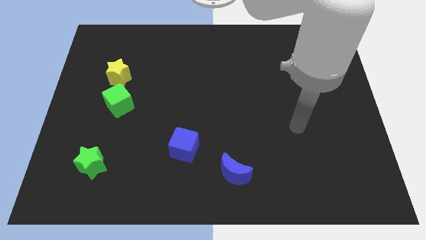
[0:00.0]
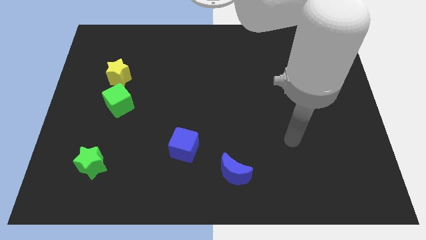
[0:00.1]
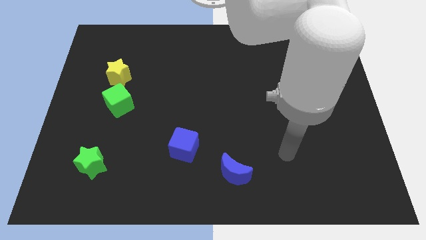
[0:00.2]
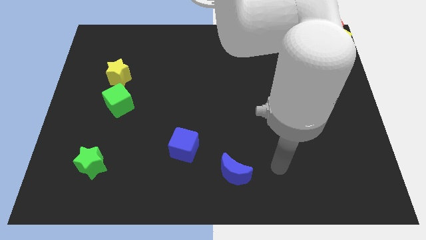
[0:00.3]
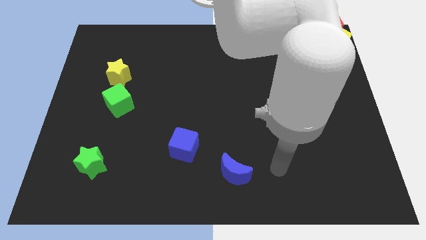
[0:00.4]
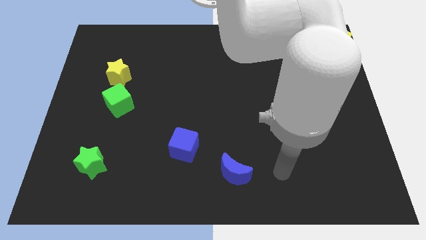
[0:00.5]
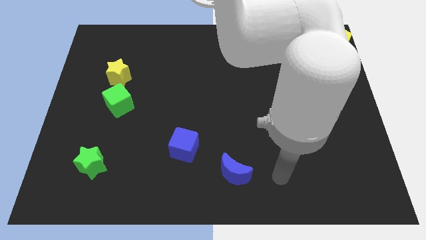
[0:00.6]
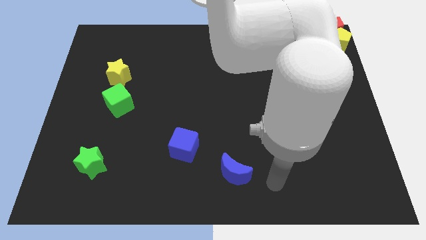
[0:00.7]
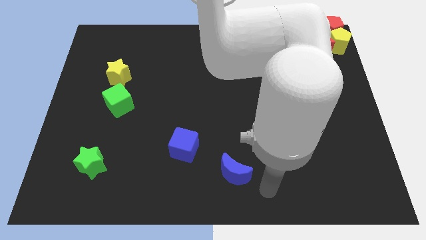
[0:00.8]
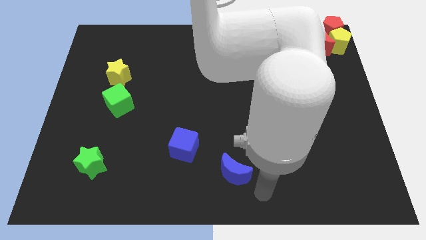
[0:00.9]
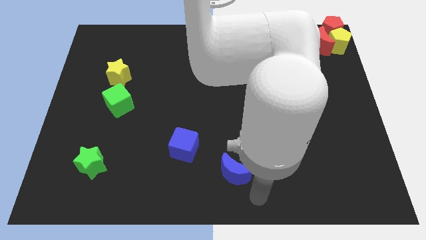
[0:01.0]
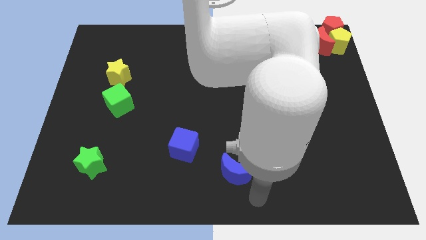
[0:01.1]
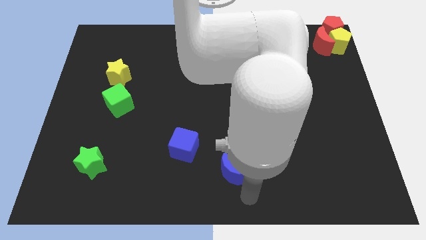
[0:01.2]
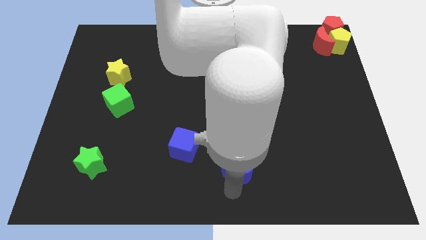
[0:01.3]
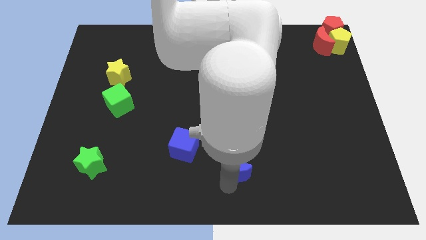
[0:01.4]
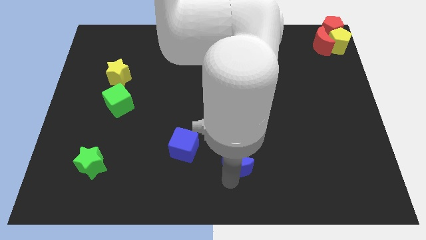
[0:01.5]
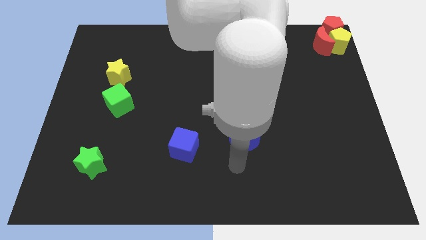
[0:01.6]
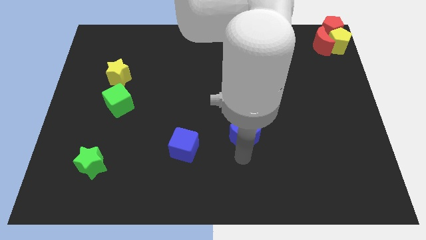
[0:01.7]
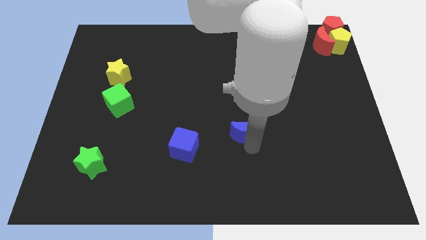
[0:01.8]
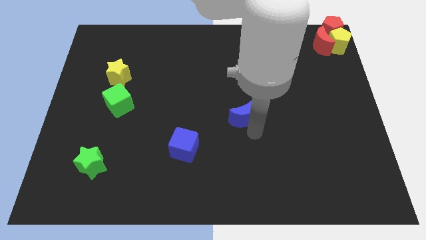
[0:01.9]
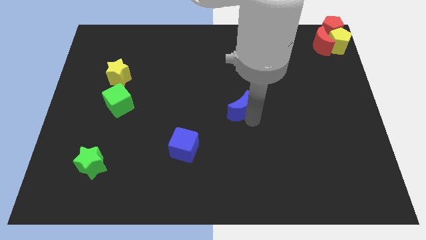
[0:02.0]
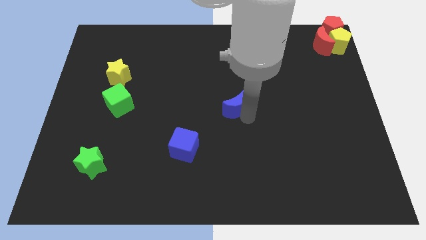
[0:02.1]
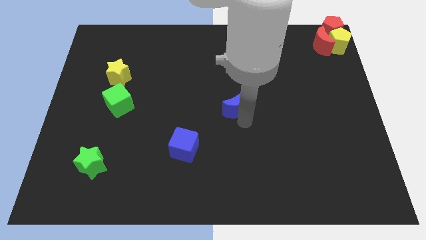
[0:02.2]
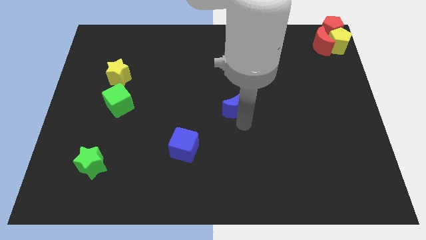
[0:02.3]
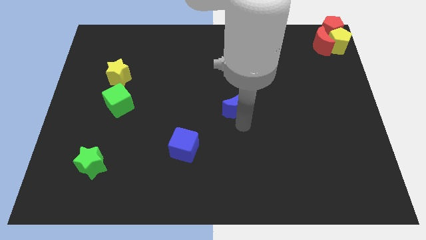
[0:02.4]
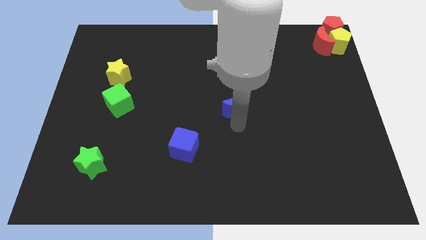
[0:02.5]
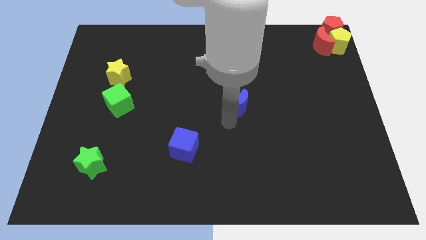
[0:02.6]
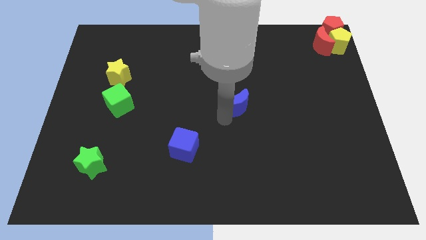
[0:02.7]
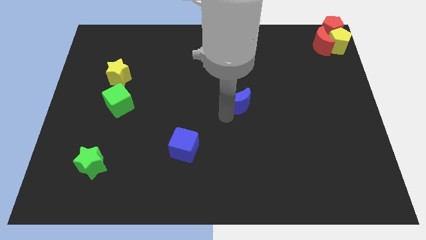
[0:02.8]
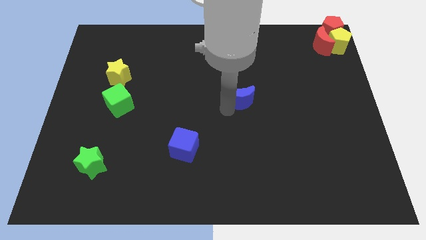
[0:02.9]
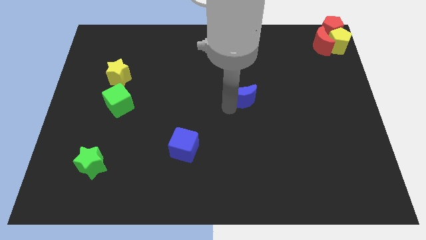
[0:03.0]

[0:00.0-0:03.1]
move your arm and move the blue moon towards the center

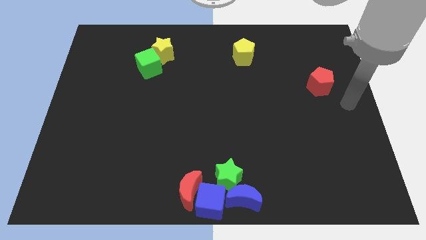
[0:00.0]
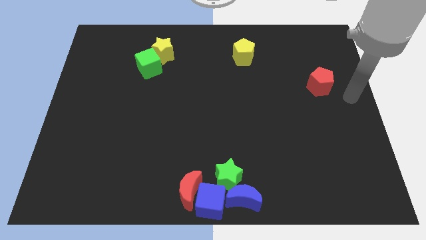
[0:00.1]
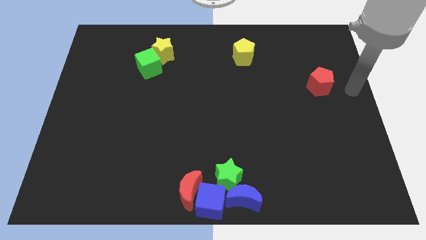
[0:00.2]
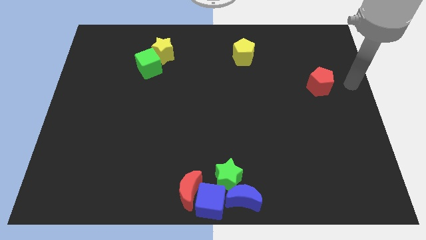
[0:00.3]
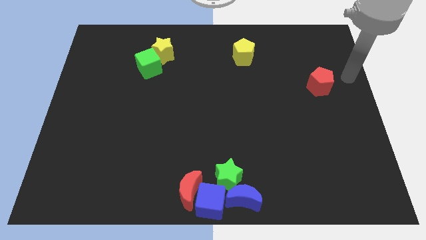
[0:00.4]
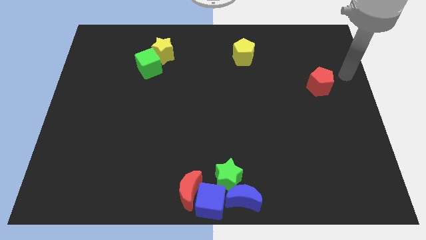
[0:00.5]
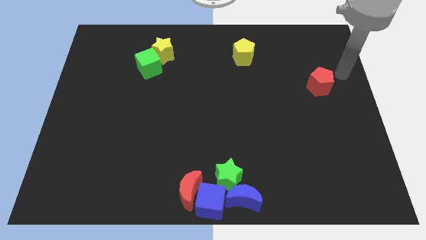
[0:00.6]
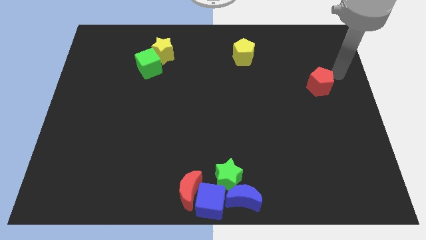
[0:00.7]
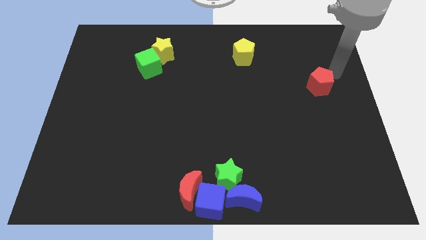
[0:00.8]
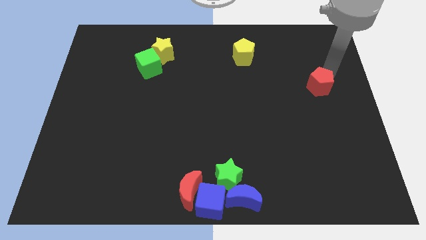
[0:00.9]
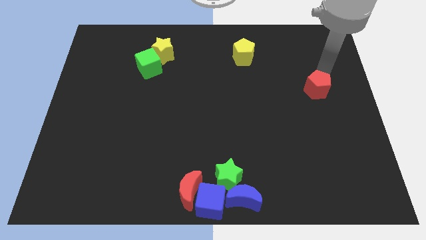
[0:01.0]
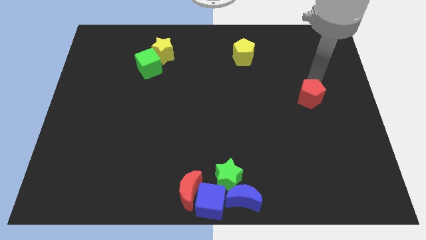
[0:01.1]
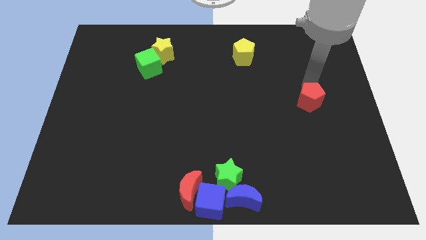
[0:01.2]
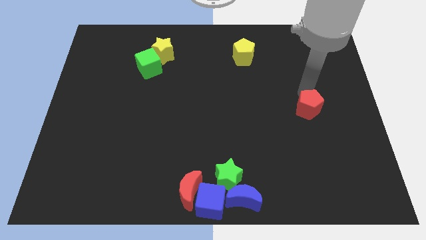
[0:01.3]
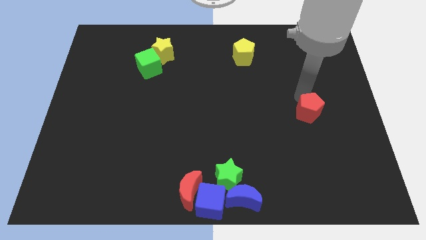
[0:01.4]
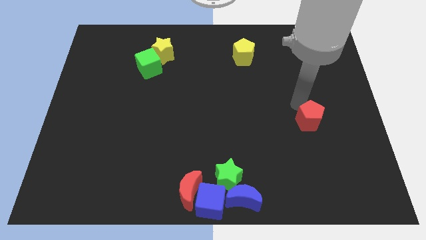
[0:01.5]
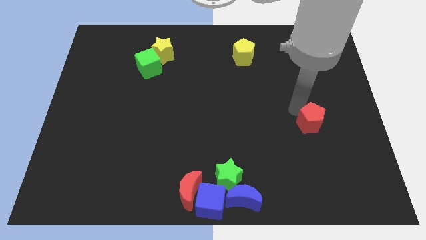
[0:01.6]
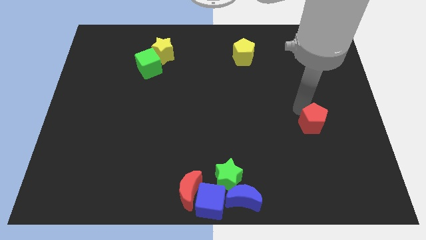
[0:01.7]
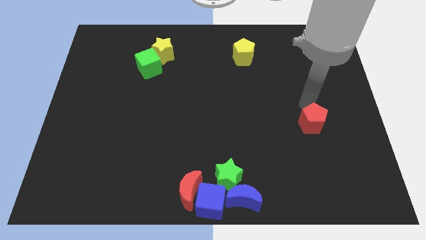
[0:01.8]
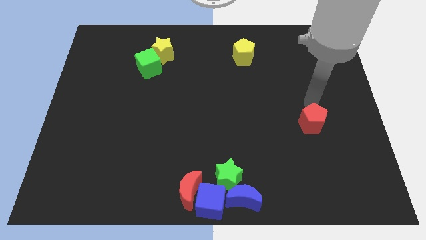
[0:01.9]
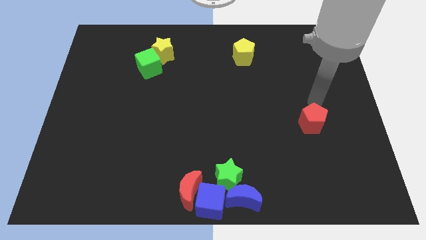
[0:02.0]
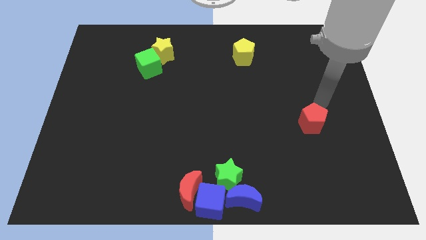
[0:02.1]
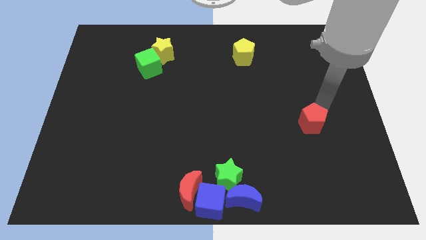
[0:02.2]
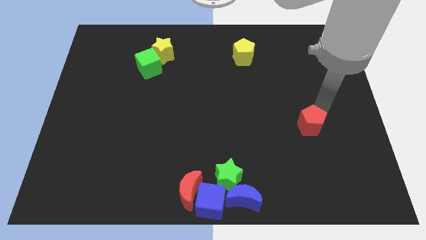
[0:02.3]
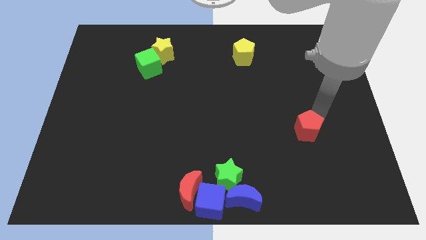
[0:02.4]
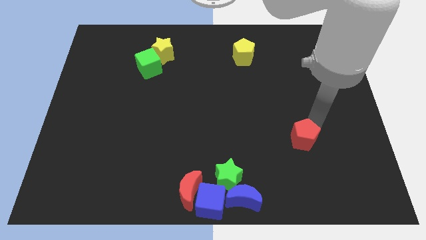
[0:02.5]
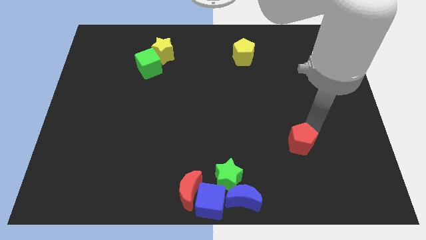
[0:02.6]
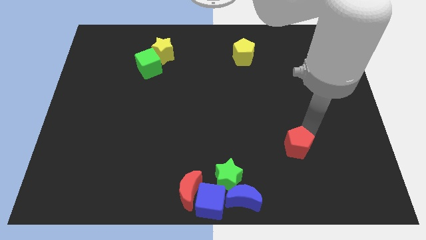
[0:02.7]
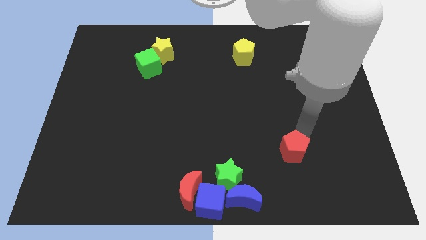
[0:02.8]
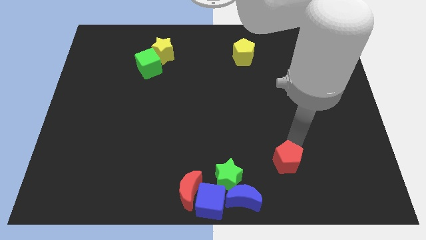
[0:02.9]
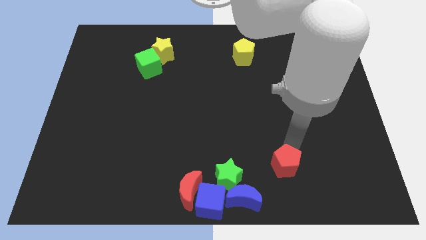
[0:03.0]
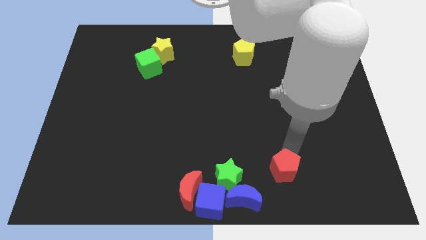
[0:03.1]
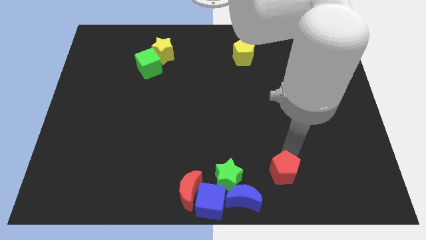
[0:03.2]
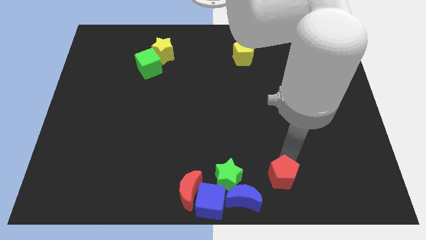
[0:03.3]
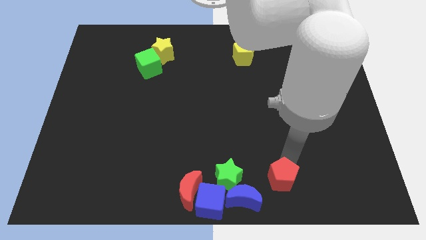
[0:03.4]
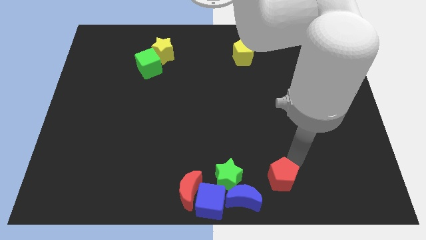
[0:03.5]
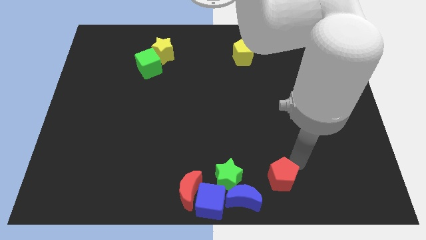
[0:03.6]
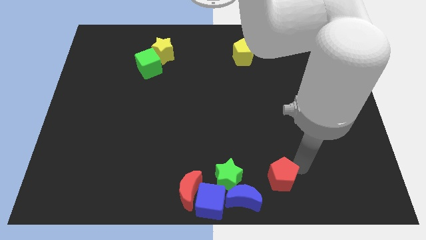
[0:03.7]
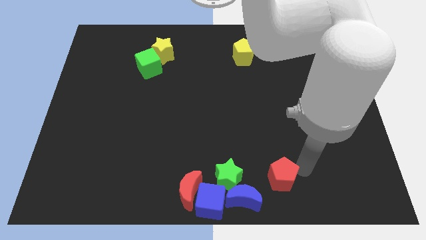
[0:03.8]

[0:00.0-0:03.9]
push the red pentagon towards the bottom center of the board

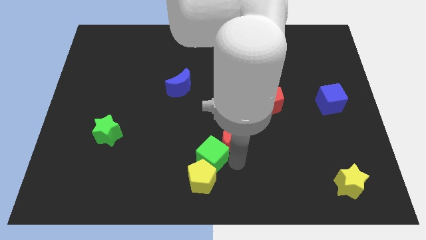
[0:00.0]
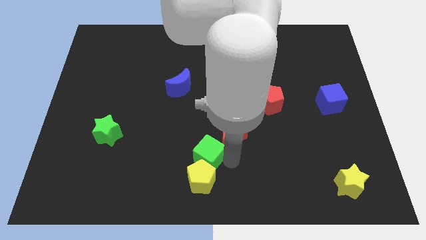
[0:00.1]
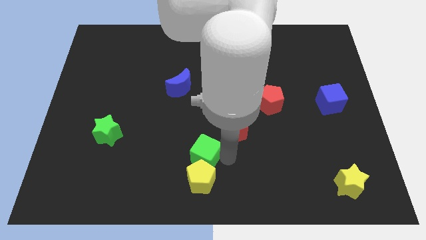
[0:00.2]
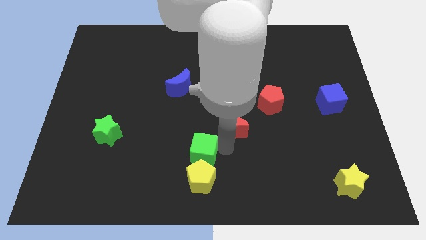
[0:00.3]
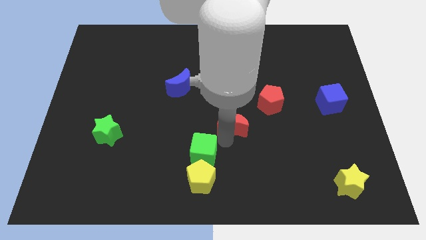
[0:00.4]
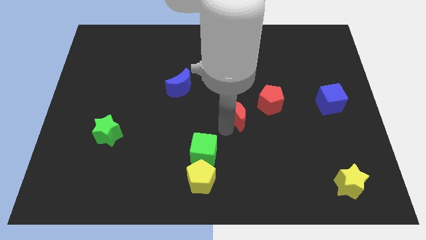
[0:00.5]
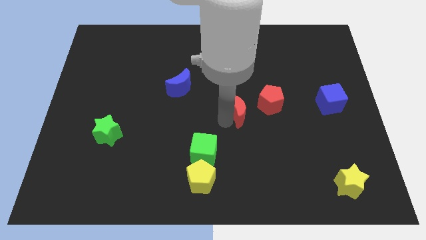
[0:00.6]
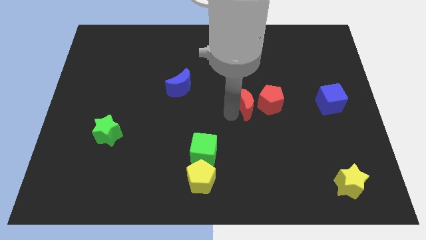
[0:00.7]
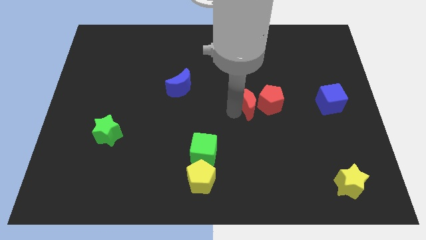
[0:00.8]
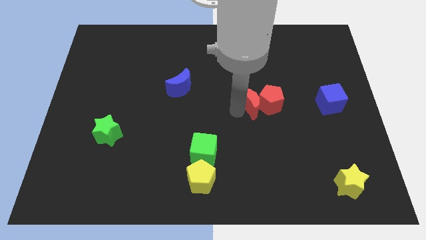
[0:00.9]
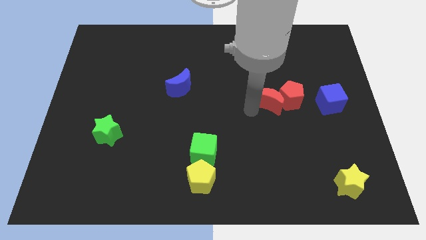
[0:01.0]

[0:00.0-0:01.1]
push red crescent towards the left of the red pentagon

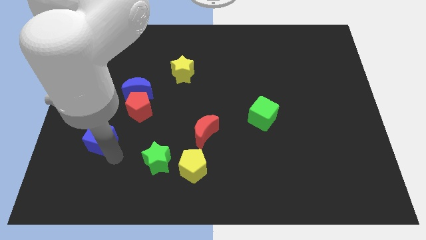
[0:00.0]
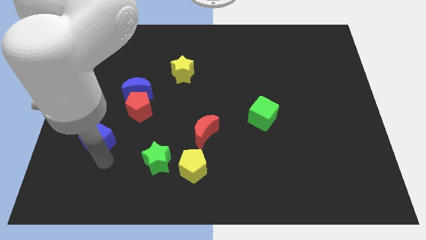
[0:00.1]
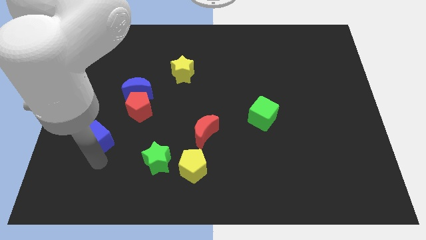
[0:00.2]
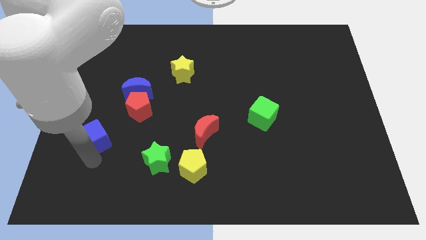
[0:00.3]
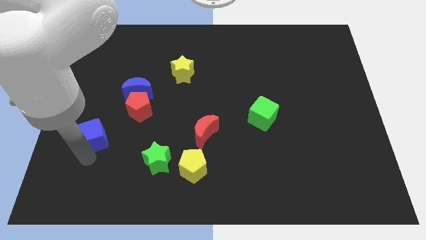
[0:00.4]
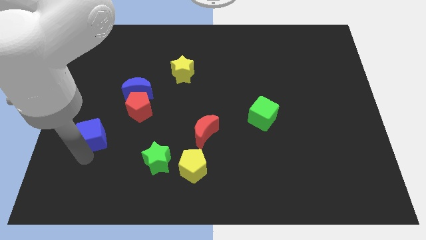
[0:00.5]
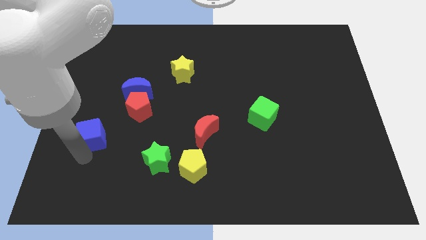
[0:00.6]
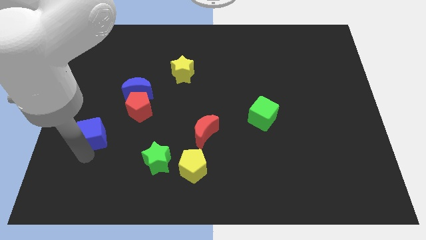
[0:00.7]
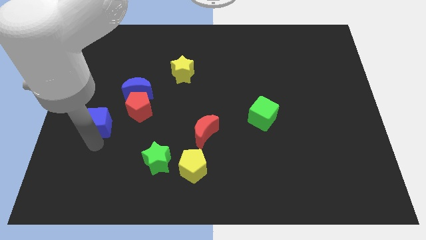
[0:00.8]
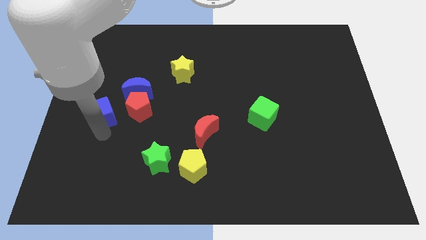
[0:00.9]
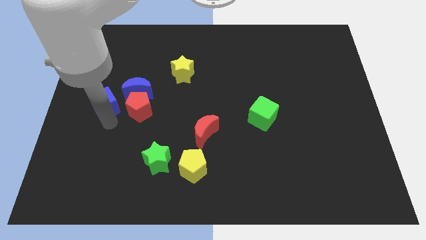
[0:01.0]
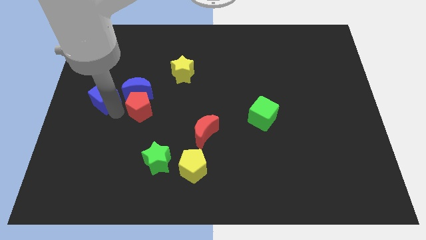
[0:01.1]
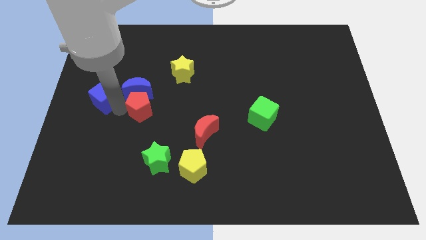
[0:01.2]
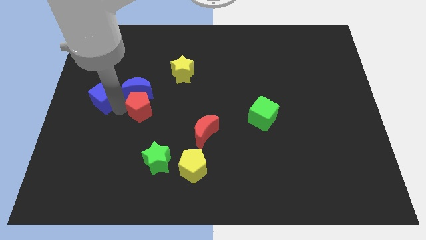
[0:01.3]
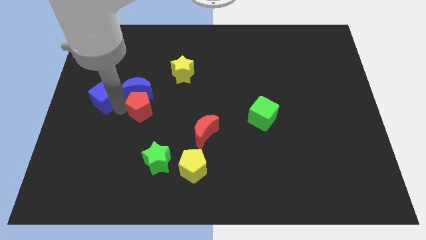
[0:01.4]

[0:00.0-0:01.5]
place blue cube to the left of blue moon
